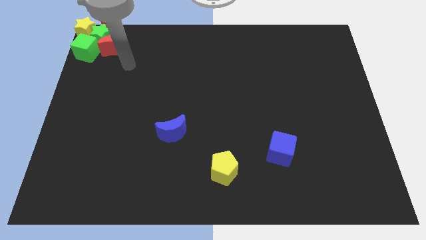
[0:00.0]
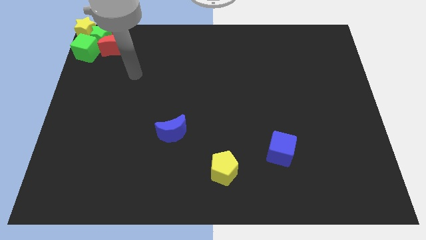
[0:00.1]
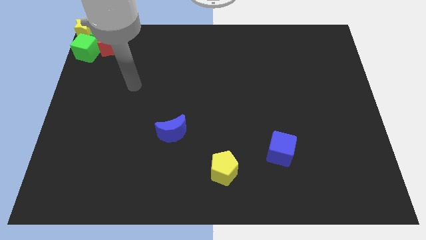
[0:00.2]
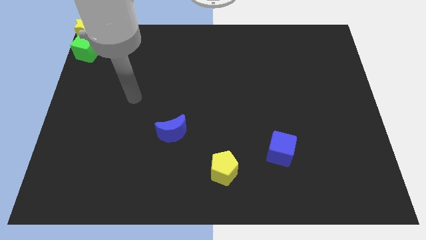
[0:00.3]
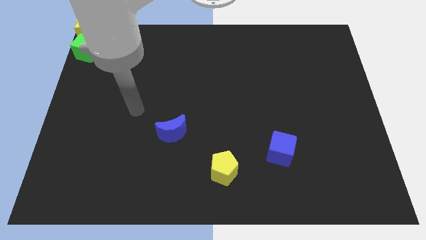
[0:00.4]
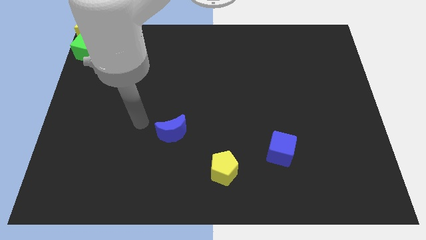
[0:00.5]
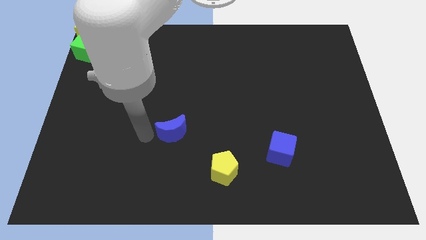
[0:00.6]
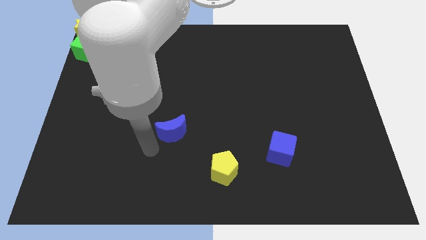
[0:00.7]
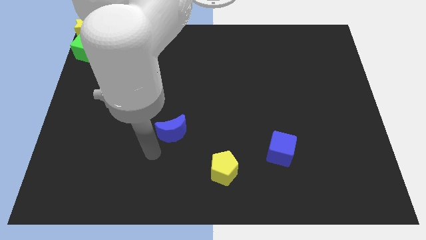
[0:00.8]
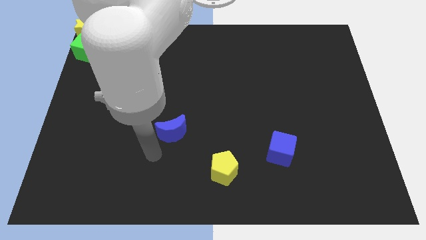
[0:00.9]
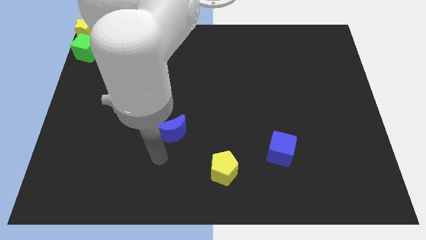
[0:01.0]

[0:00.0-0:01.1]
move the blue block to the top side of the board

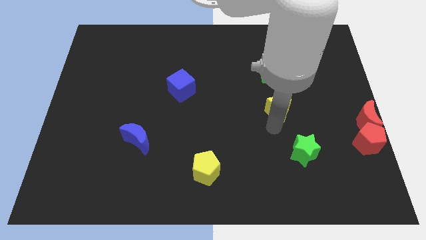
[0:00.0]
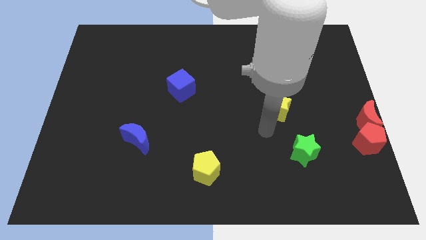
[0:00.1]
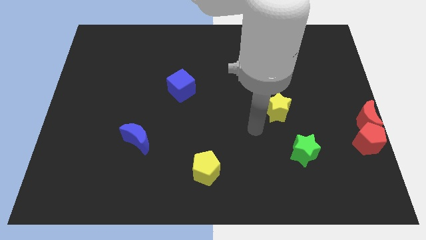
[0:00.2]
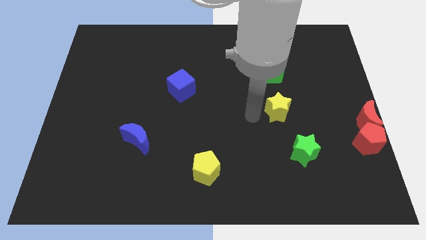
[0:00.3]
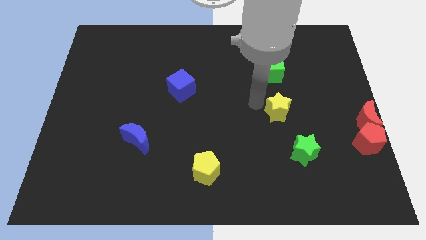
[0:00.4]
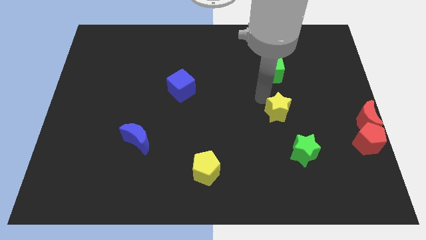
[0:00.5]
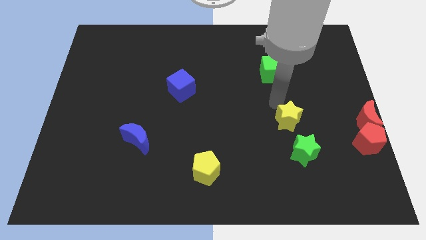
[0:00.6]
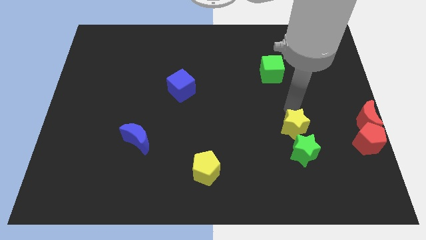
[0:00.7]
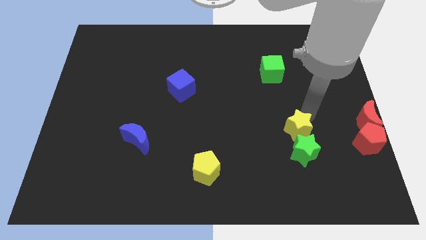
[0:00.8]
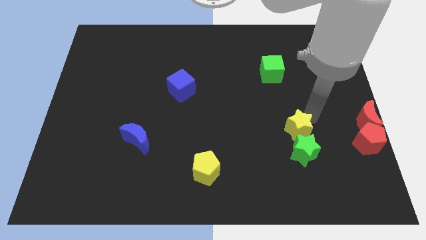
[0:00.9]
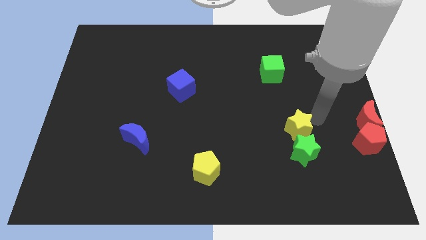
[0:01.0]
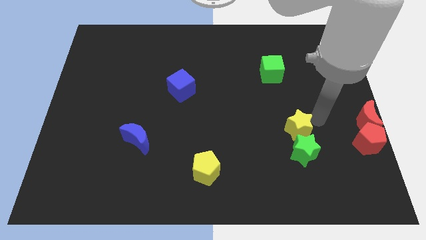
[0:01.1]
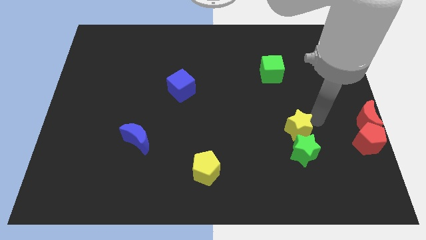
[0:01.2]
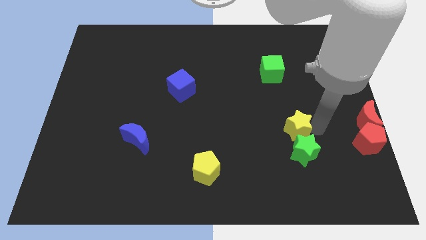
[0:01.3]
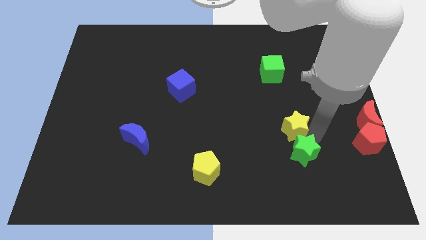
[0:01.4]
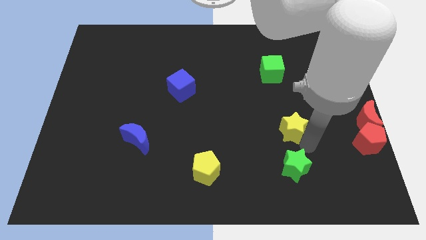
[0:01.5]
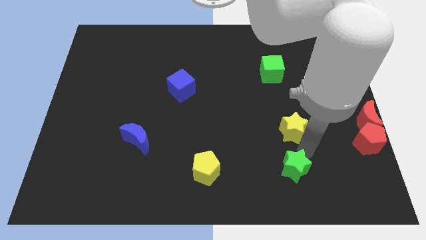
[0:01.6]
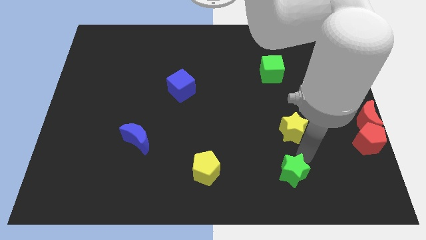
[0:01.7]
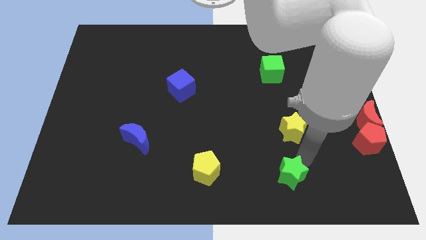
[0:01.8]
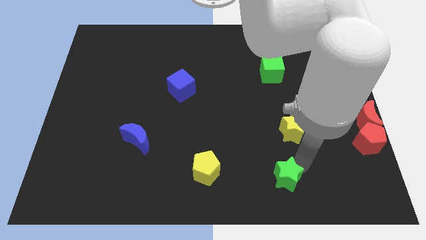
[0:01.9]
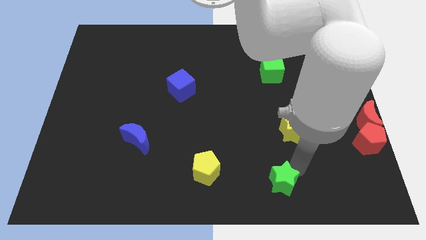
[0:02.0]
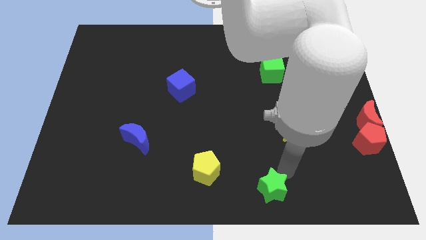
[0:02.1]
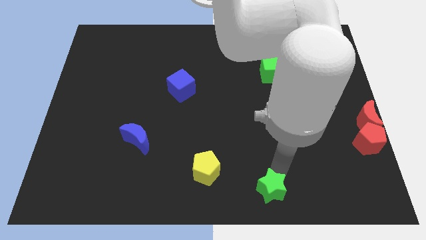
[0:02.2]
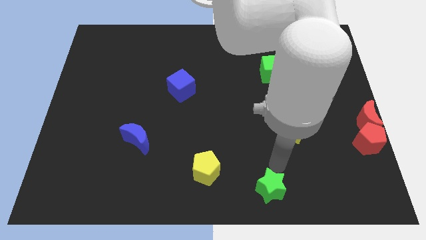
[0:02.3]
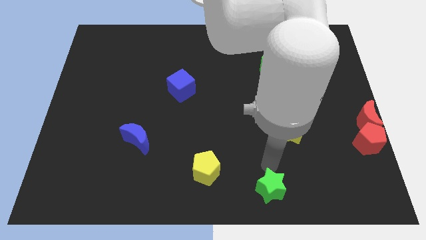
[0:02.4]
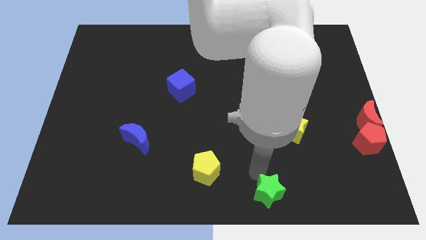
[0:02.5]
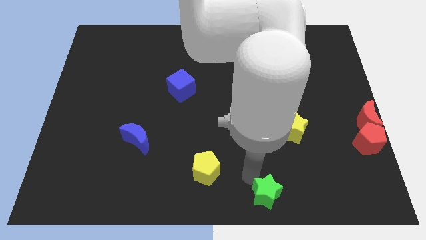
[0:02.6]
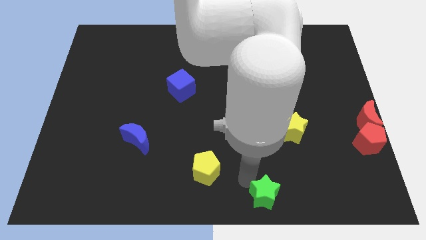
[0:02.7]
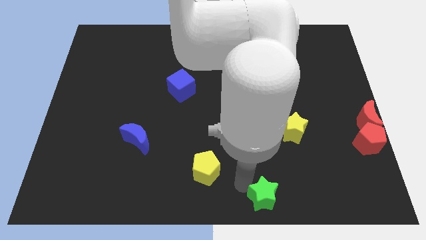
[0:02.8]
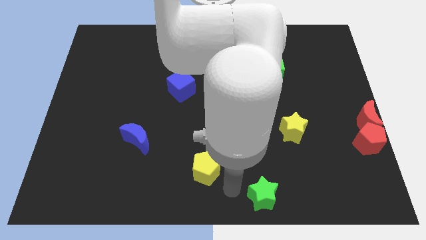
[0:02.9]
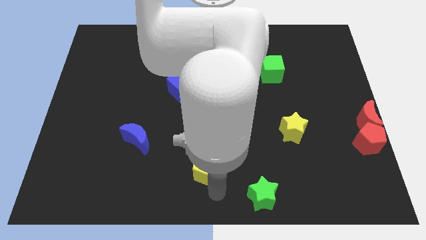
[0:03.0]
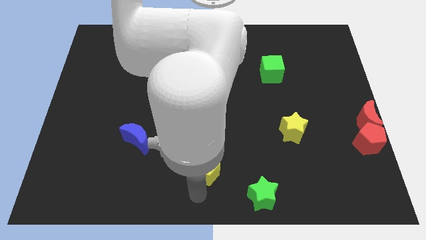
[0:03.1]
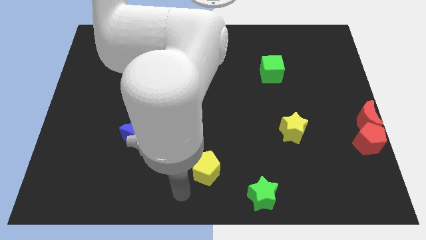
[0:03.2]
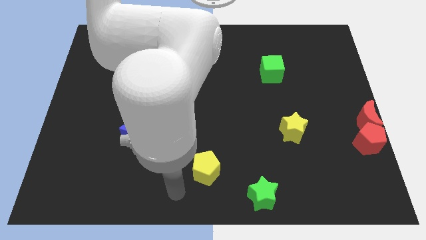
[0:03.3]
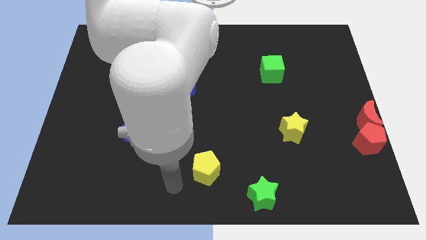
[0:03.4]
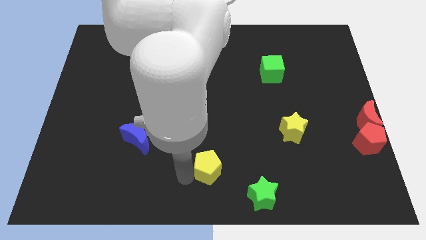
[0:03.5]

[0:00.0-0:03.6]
push the green star towards the bottom

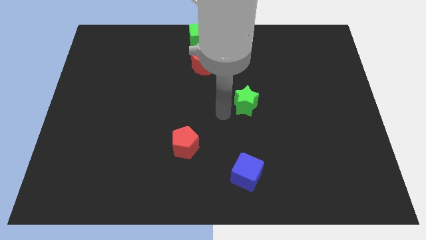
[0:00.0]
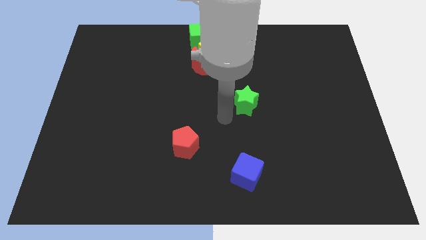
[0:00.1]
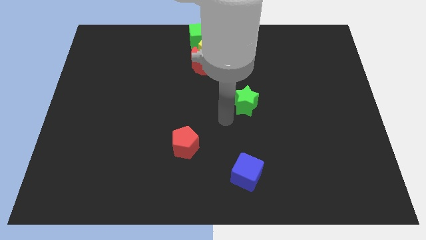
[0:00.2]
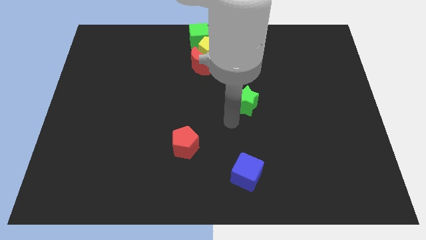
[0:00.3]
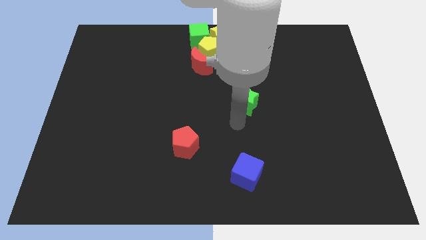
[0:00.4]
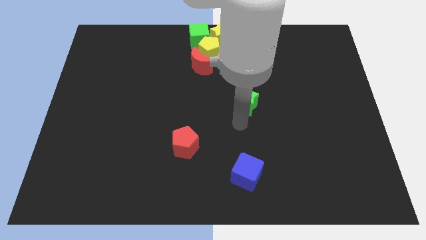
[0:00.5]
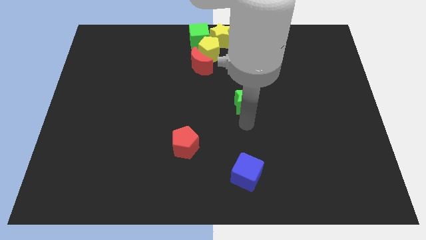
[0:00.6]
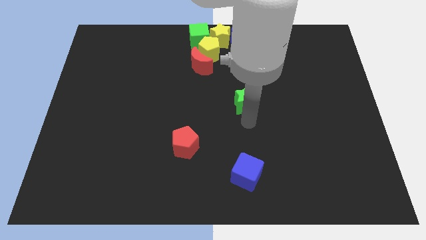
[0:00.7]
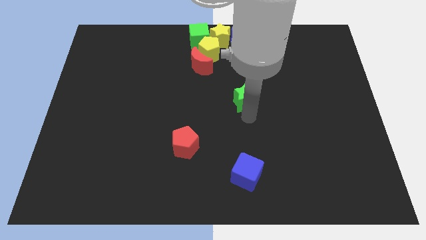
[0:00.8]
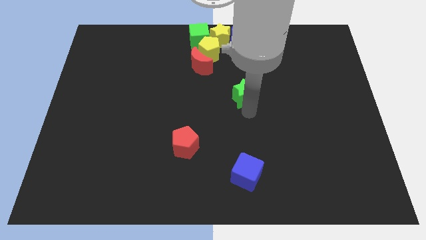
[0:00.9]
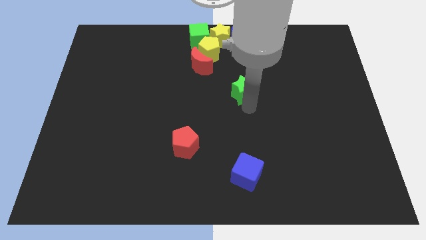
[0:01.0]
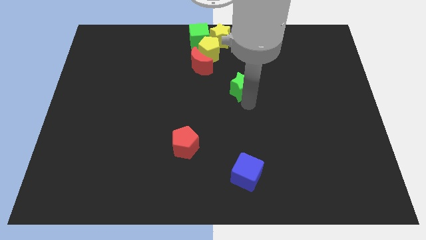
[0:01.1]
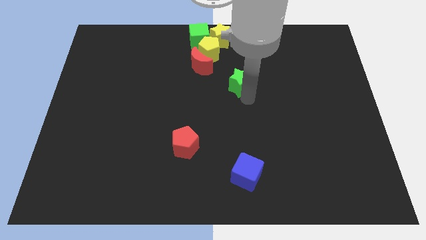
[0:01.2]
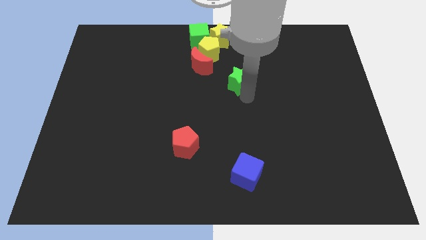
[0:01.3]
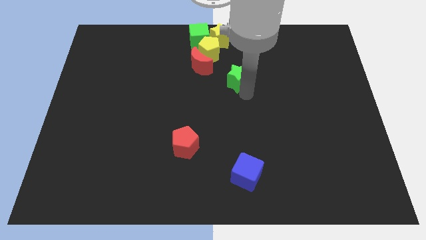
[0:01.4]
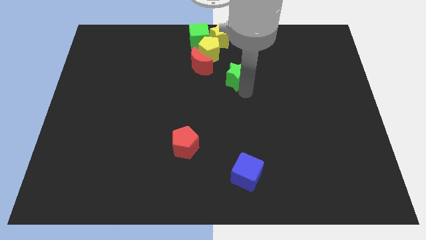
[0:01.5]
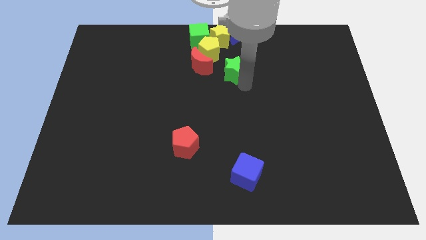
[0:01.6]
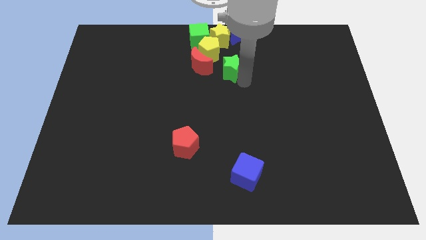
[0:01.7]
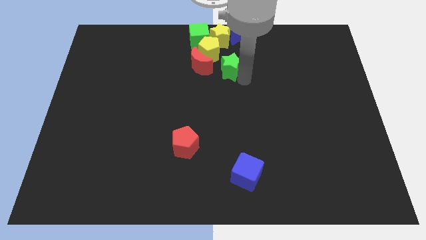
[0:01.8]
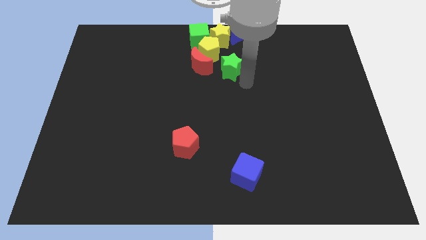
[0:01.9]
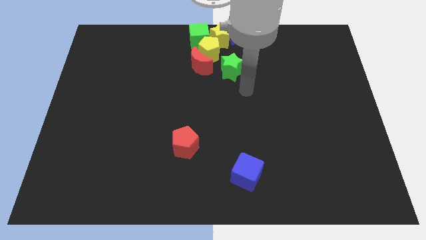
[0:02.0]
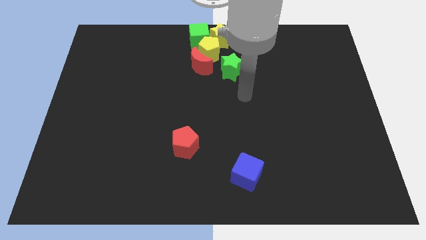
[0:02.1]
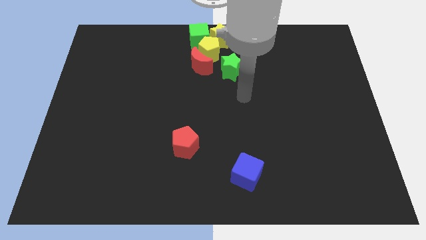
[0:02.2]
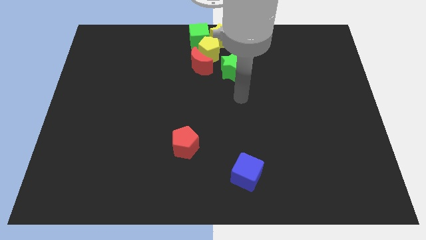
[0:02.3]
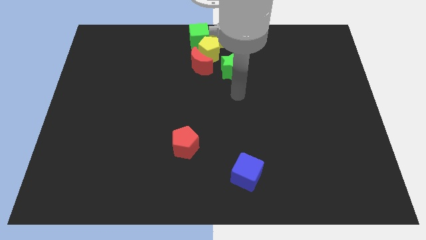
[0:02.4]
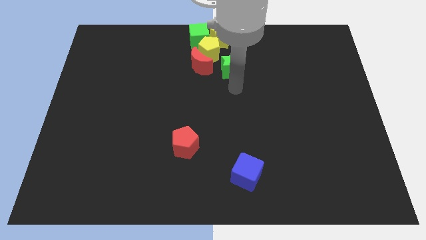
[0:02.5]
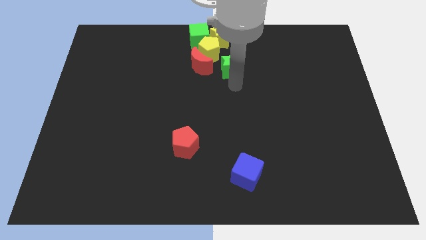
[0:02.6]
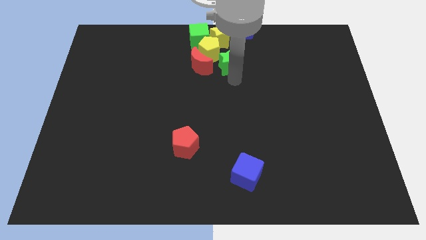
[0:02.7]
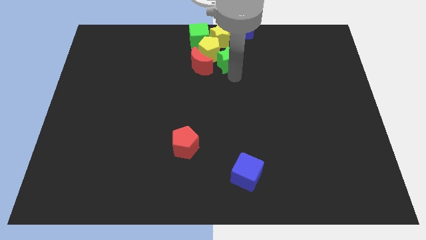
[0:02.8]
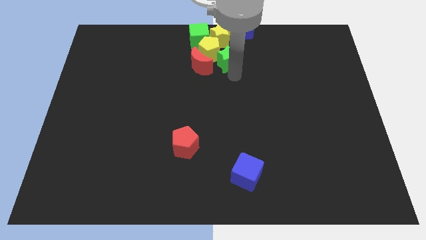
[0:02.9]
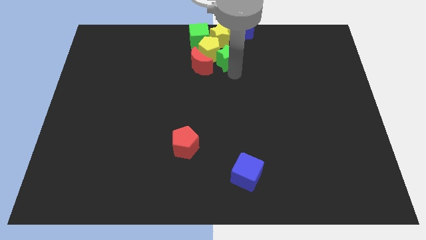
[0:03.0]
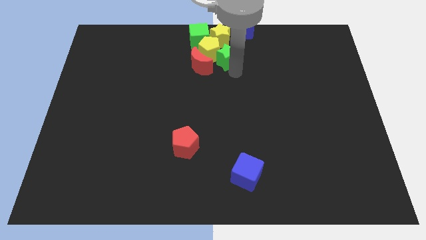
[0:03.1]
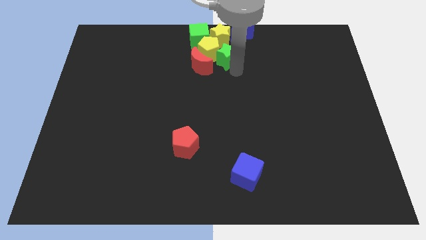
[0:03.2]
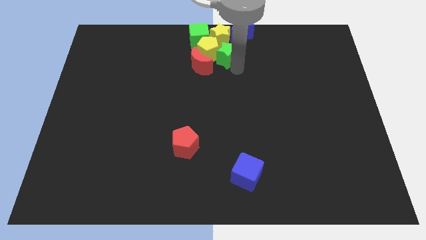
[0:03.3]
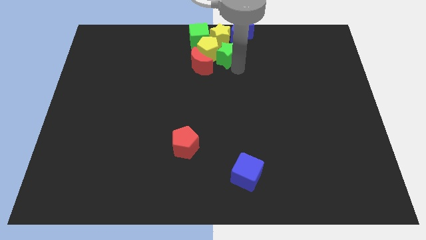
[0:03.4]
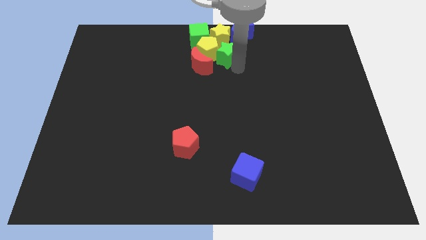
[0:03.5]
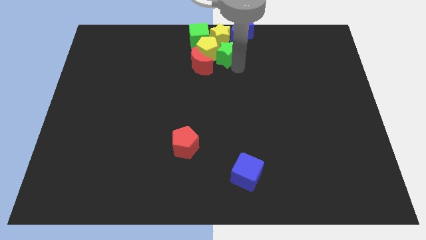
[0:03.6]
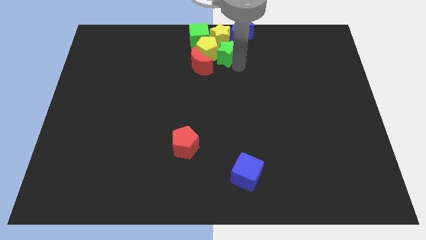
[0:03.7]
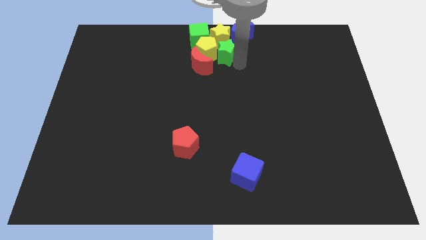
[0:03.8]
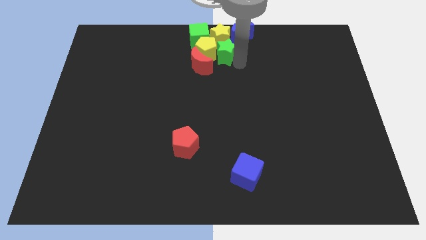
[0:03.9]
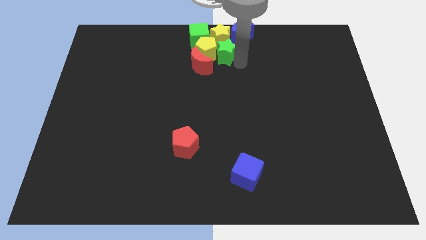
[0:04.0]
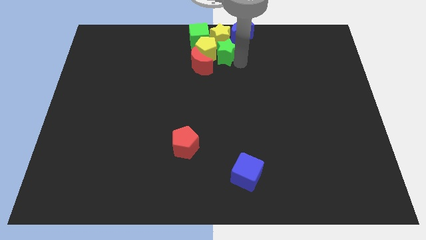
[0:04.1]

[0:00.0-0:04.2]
move the green star towards the yellow pentagon
